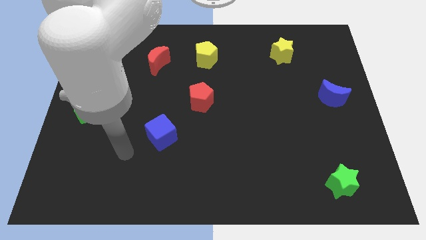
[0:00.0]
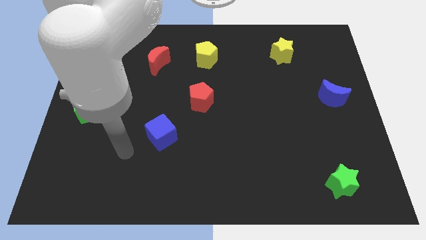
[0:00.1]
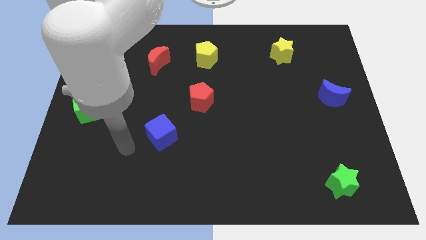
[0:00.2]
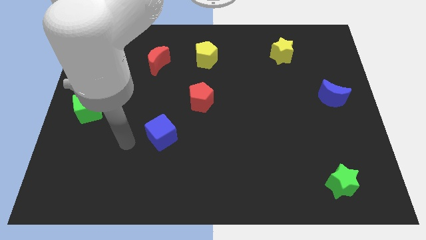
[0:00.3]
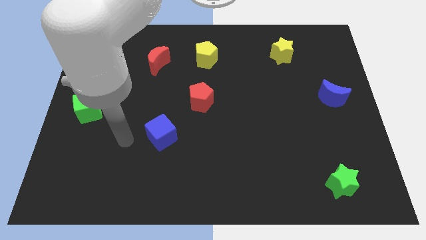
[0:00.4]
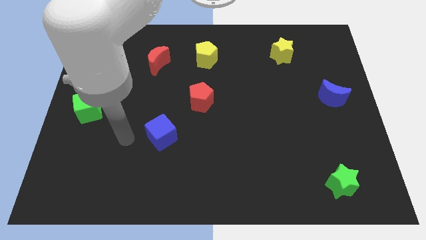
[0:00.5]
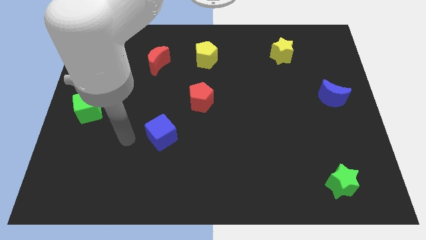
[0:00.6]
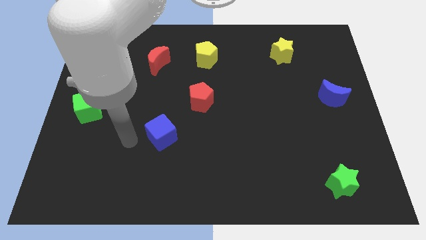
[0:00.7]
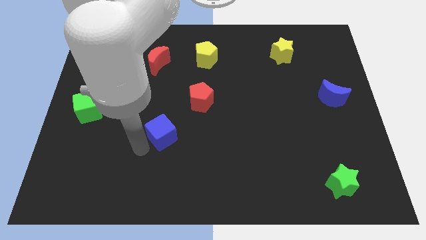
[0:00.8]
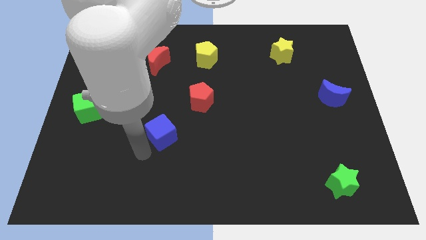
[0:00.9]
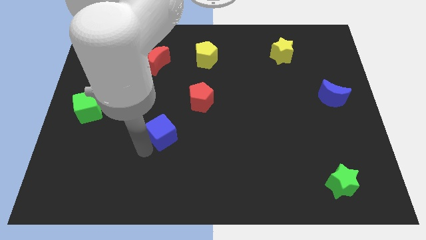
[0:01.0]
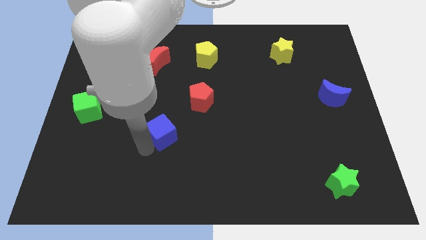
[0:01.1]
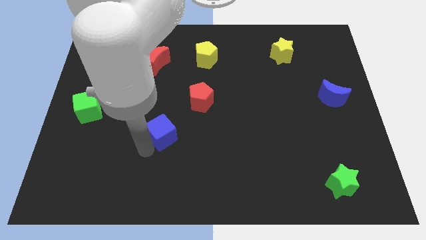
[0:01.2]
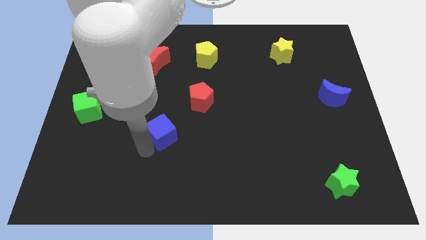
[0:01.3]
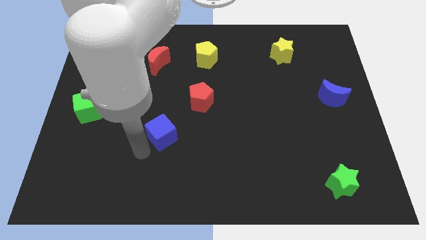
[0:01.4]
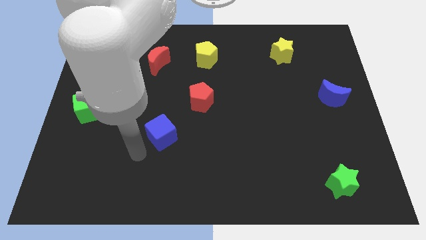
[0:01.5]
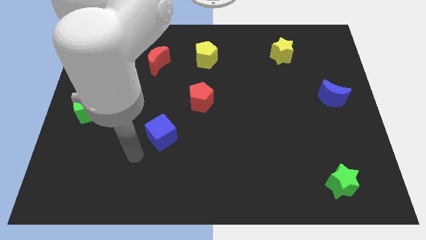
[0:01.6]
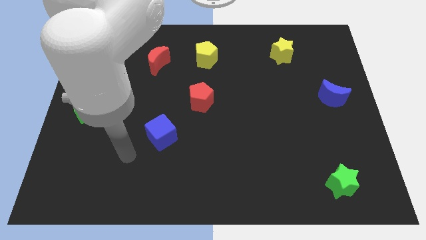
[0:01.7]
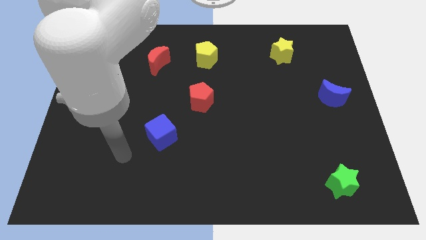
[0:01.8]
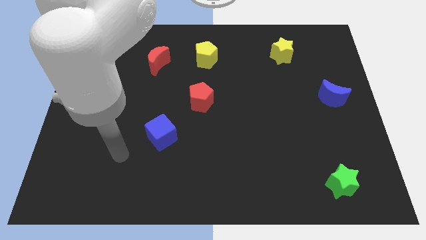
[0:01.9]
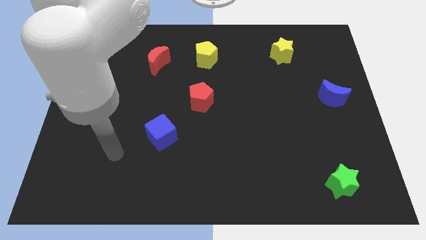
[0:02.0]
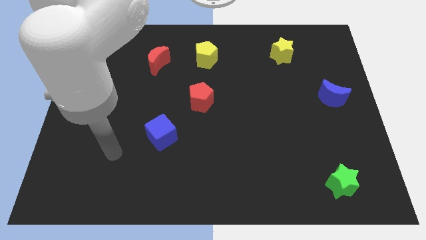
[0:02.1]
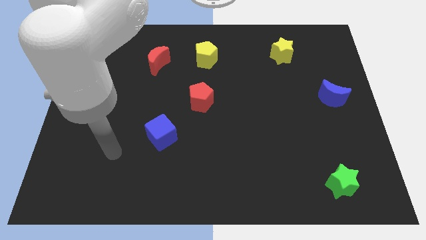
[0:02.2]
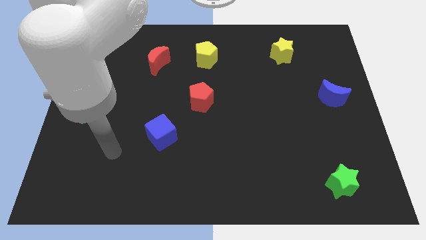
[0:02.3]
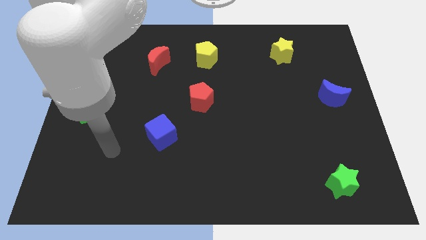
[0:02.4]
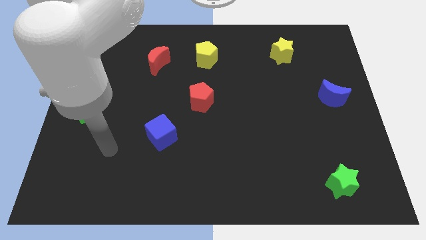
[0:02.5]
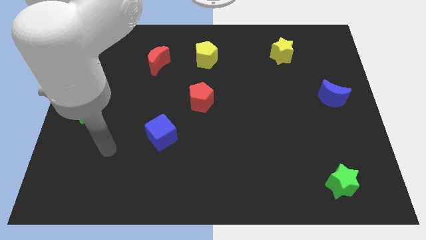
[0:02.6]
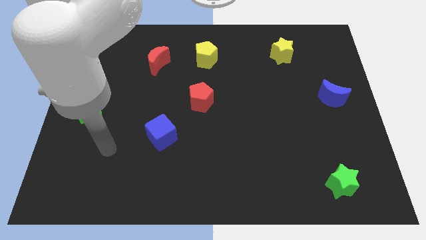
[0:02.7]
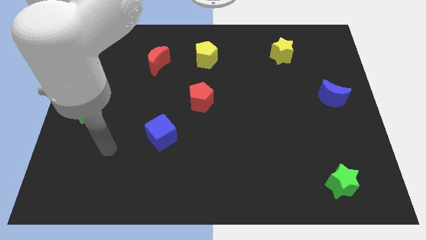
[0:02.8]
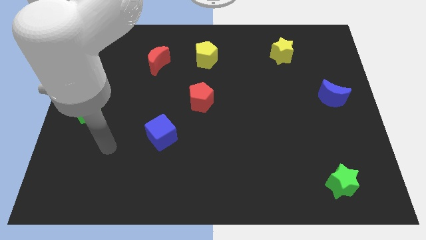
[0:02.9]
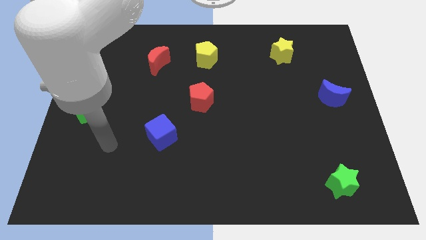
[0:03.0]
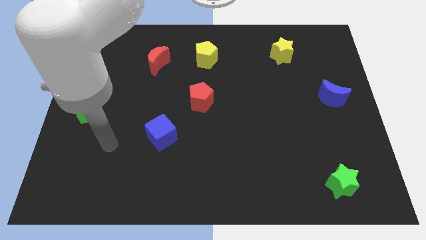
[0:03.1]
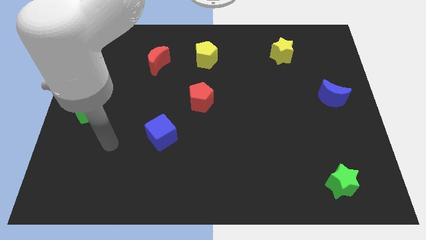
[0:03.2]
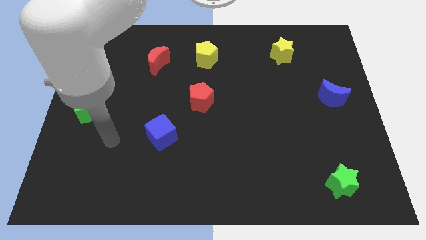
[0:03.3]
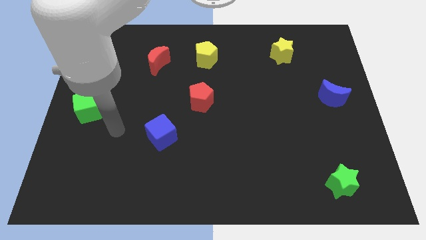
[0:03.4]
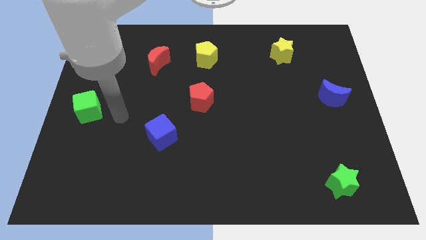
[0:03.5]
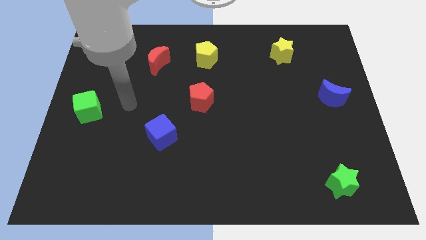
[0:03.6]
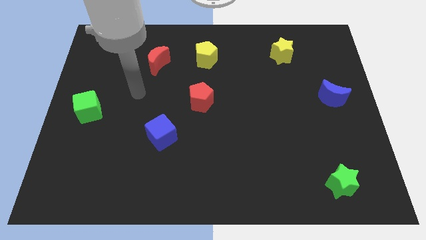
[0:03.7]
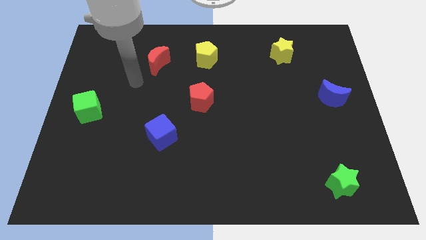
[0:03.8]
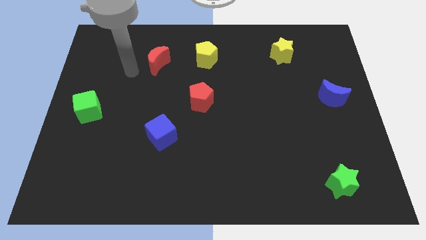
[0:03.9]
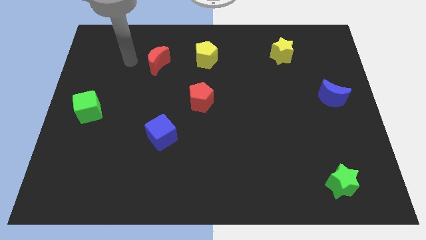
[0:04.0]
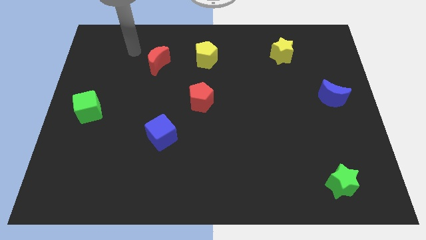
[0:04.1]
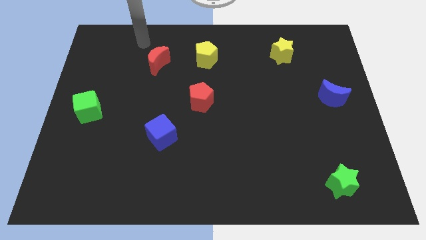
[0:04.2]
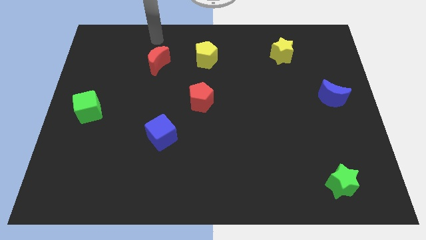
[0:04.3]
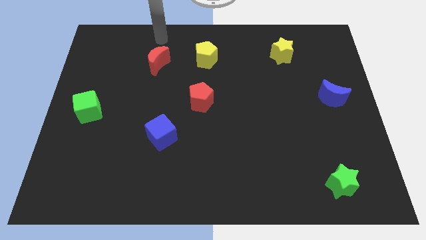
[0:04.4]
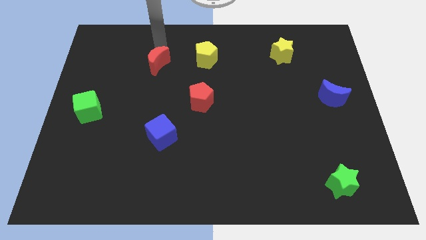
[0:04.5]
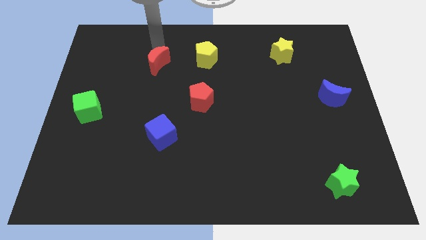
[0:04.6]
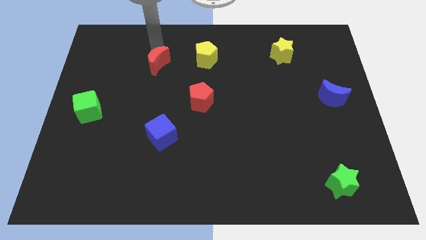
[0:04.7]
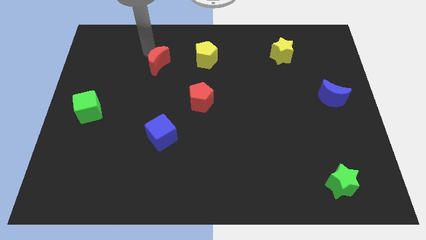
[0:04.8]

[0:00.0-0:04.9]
move your arm at the top of the red moon

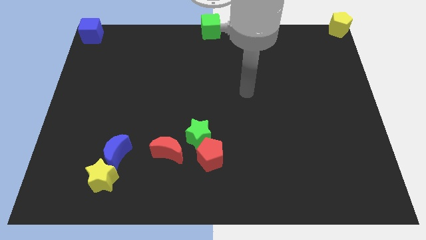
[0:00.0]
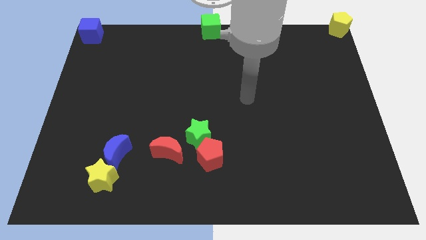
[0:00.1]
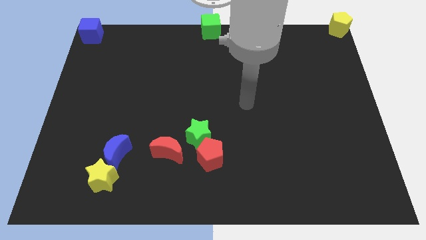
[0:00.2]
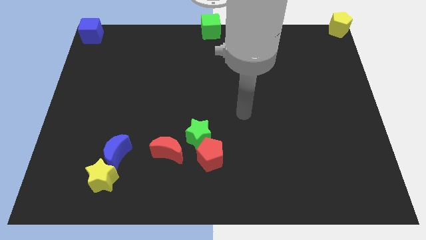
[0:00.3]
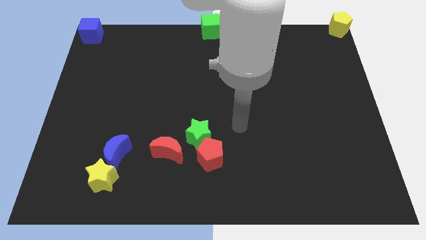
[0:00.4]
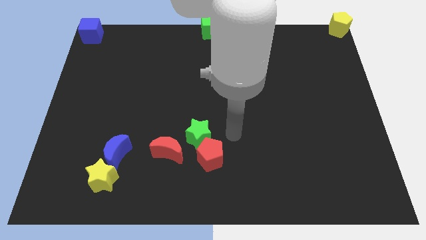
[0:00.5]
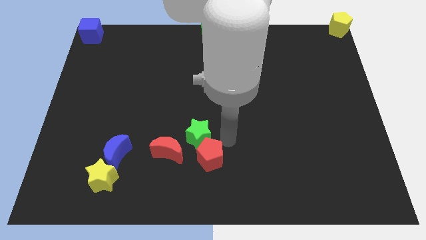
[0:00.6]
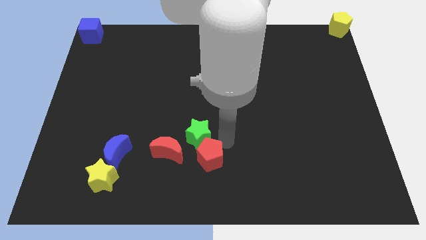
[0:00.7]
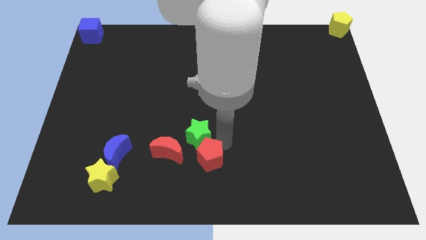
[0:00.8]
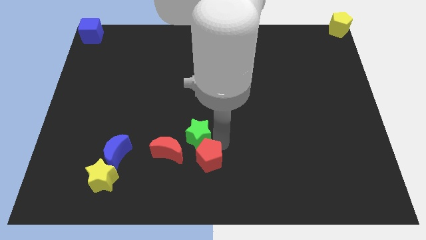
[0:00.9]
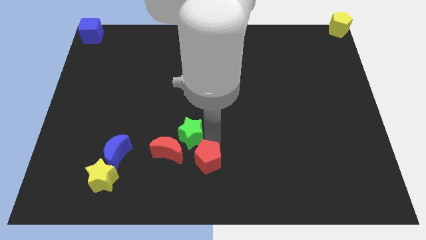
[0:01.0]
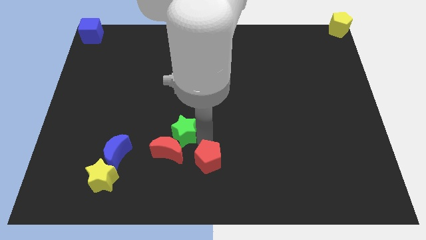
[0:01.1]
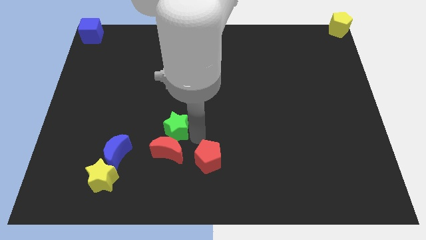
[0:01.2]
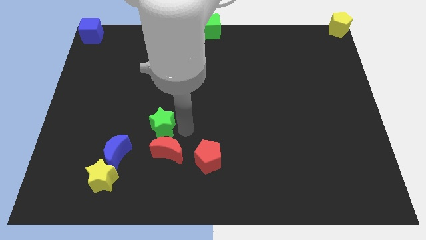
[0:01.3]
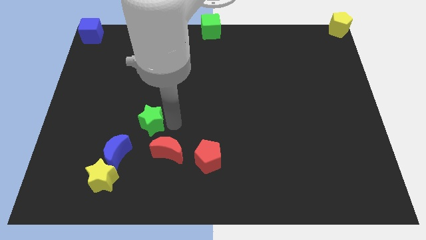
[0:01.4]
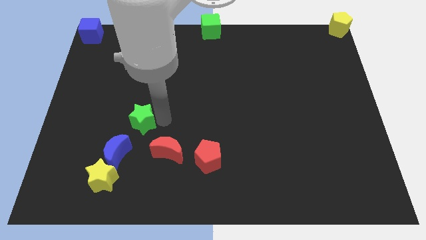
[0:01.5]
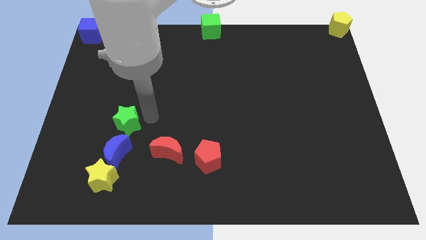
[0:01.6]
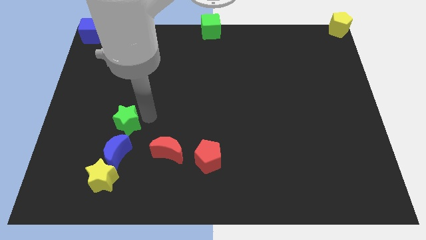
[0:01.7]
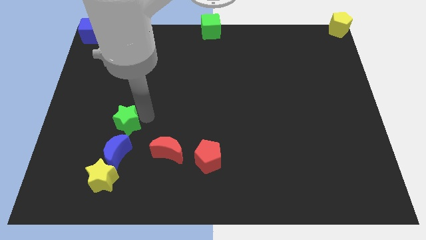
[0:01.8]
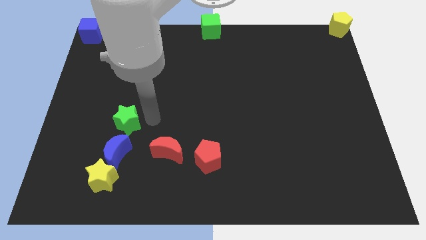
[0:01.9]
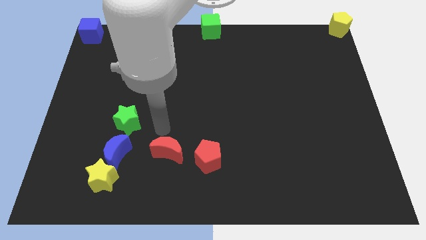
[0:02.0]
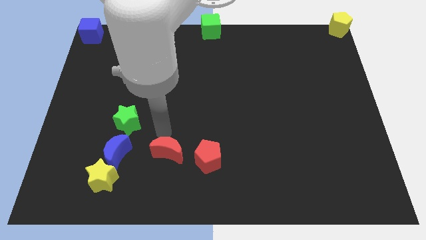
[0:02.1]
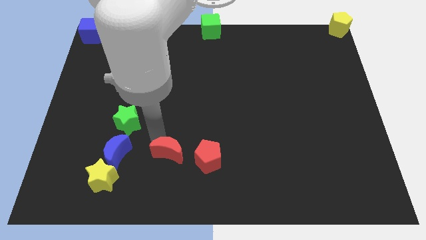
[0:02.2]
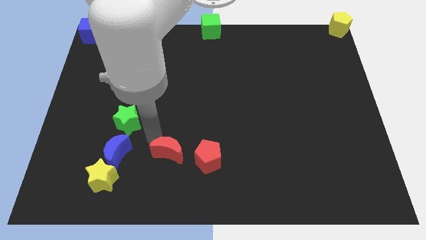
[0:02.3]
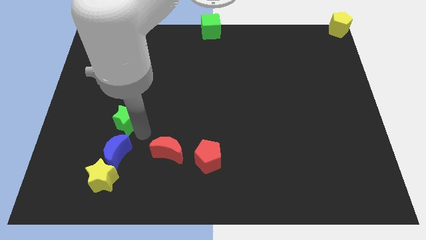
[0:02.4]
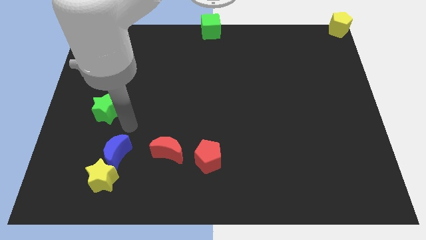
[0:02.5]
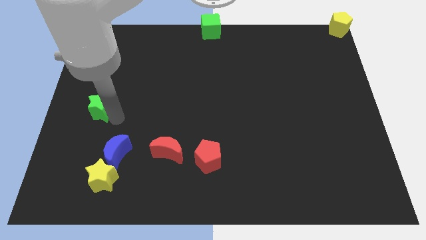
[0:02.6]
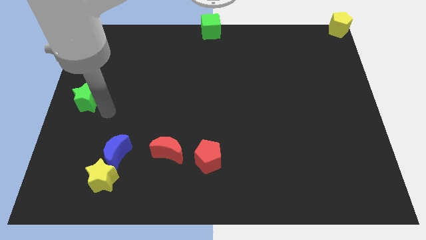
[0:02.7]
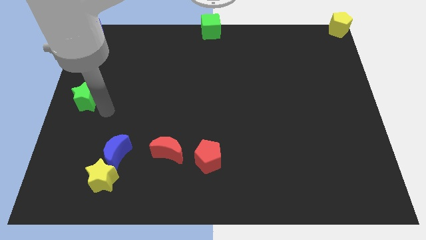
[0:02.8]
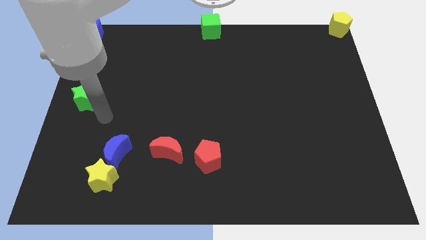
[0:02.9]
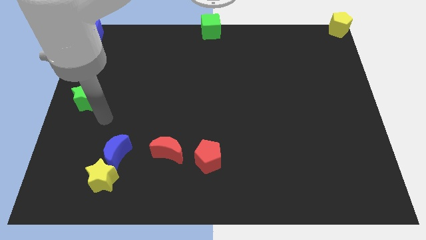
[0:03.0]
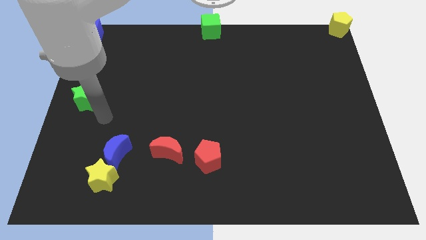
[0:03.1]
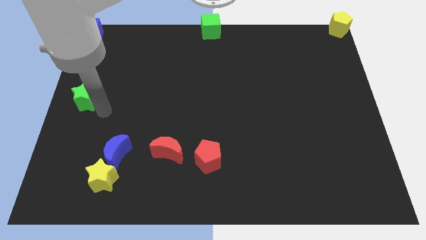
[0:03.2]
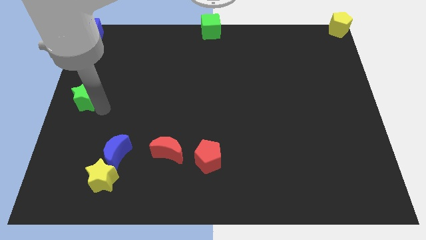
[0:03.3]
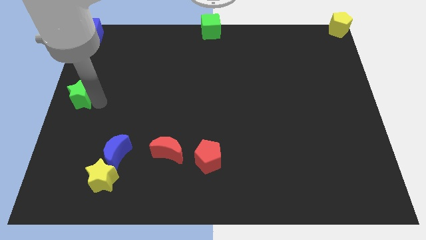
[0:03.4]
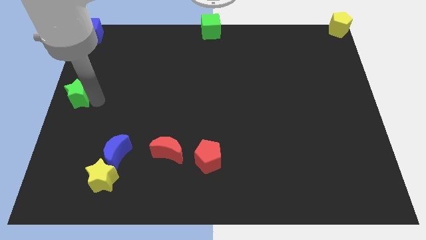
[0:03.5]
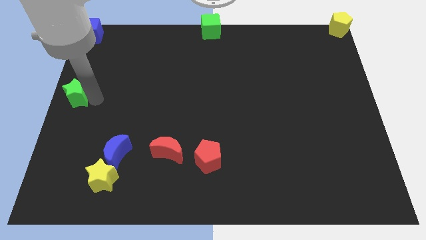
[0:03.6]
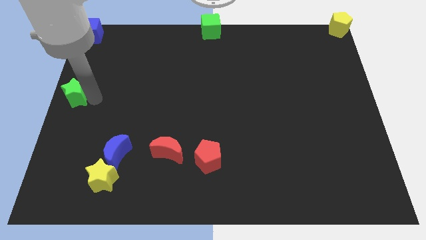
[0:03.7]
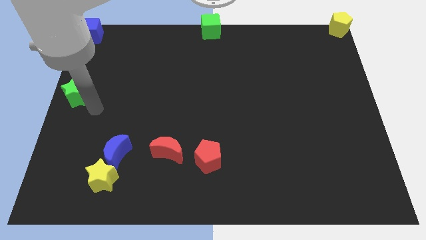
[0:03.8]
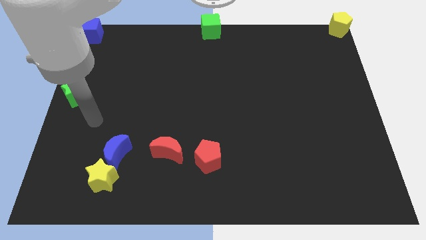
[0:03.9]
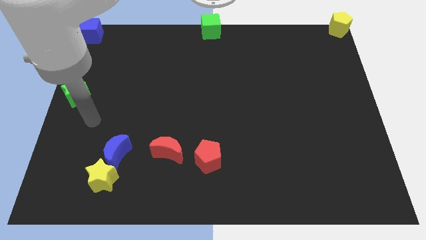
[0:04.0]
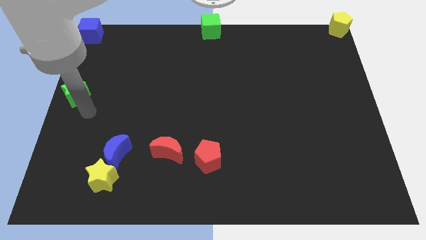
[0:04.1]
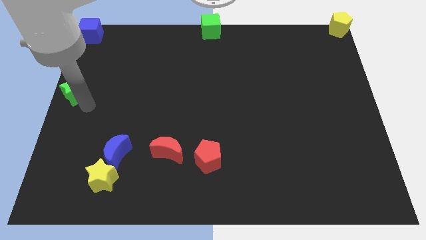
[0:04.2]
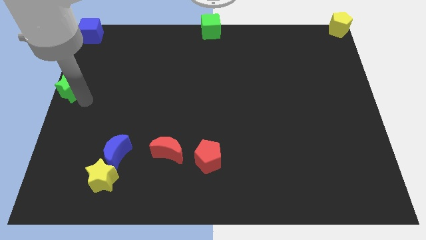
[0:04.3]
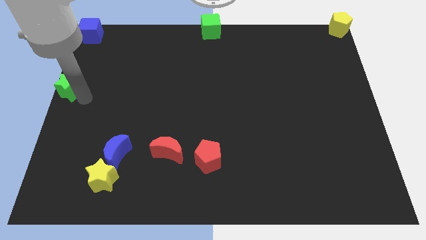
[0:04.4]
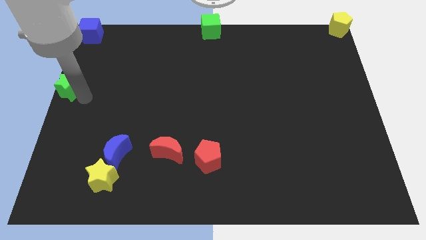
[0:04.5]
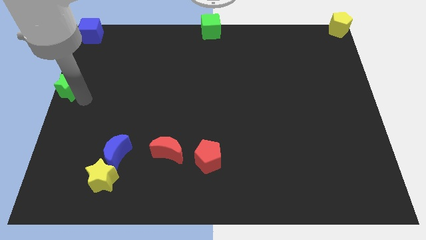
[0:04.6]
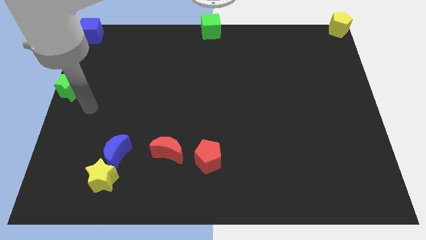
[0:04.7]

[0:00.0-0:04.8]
push the green star to the left side of the board
